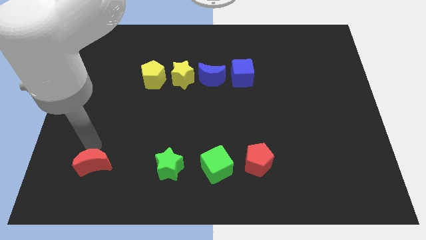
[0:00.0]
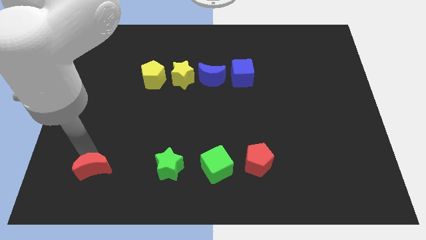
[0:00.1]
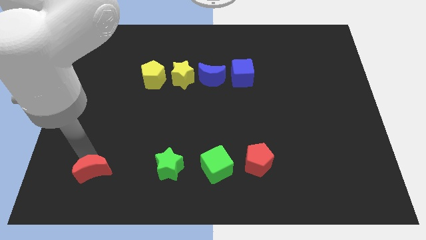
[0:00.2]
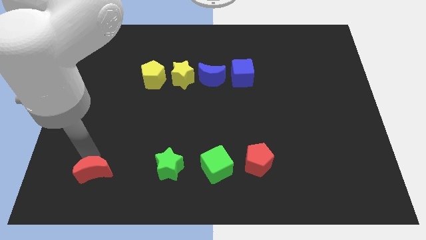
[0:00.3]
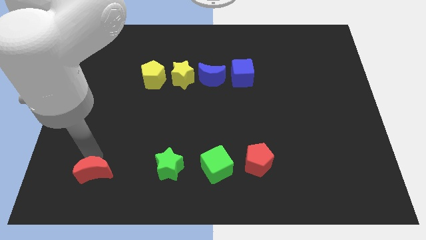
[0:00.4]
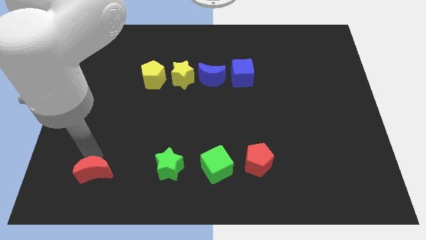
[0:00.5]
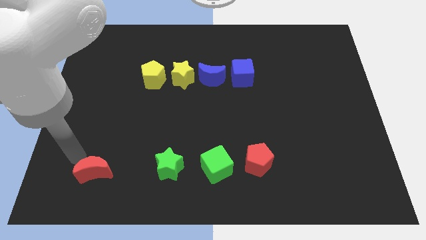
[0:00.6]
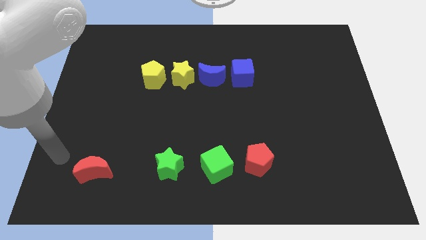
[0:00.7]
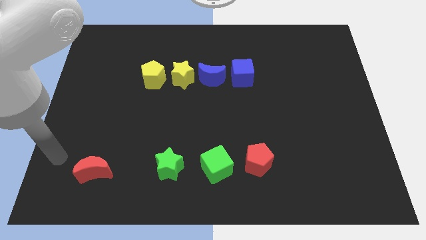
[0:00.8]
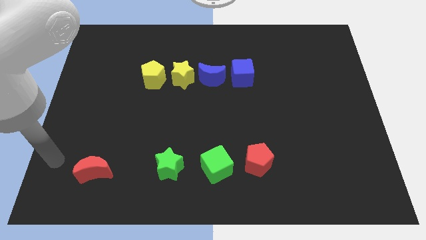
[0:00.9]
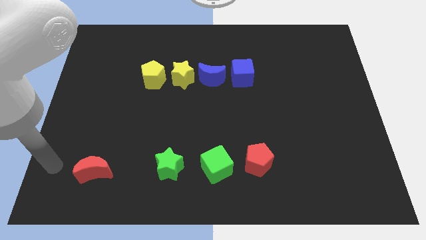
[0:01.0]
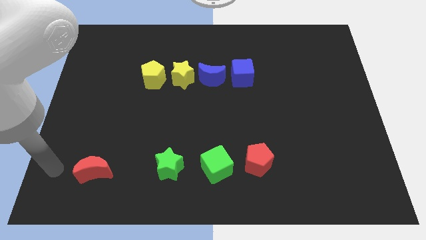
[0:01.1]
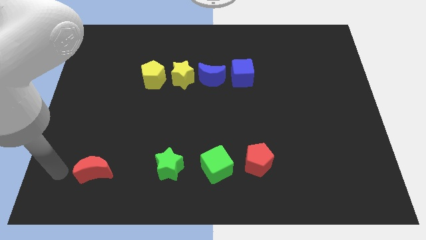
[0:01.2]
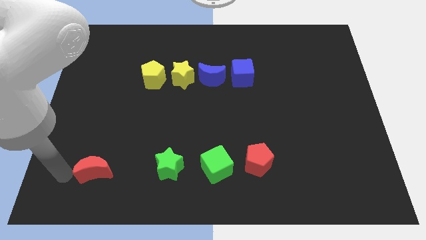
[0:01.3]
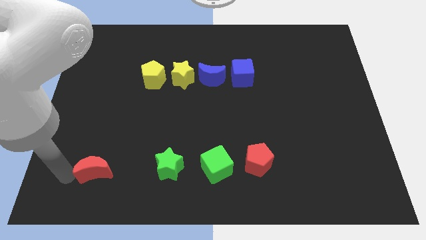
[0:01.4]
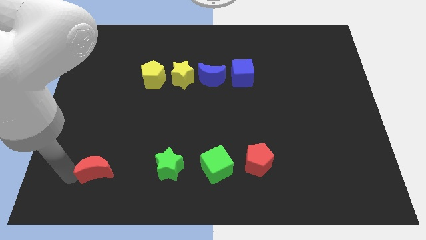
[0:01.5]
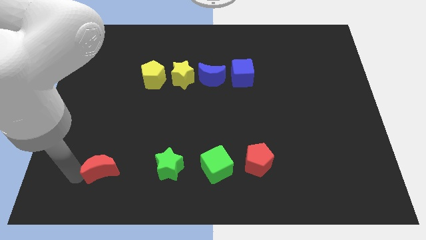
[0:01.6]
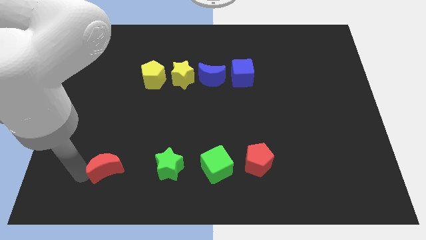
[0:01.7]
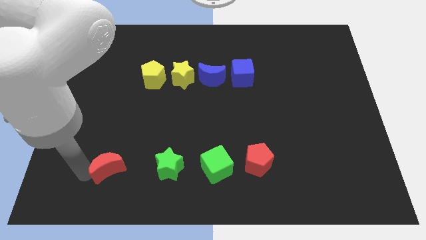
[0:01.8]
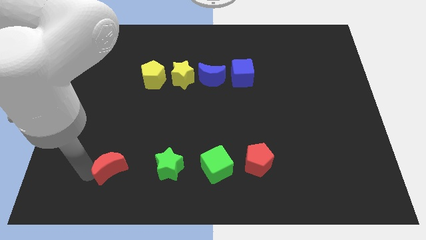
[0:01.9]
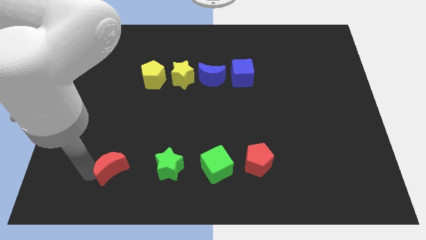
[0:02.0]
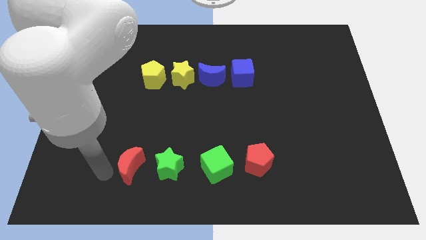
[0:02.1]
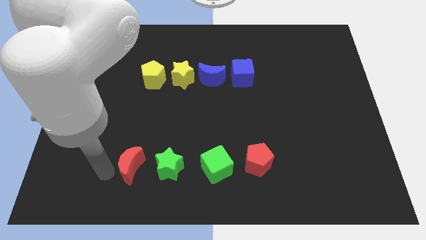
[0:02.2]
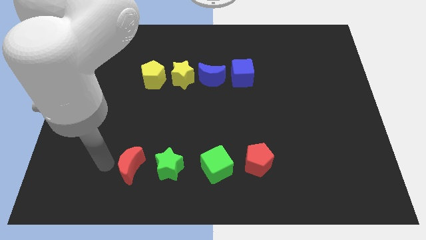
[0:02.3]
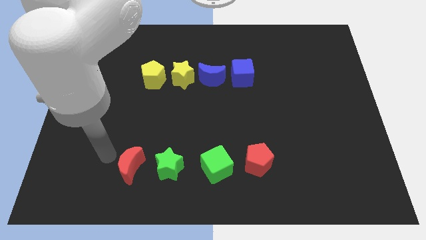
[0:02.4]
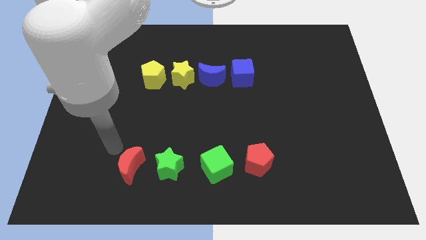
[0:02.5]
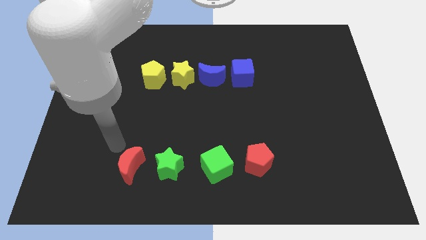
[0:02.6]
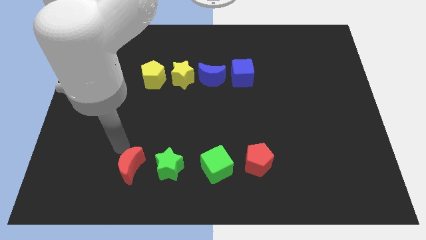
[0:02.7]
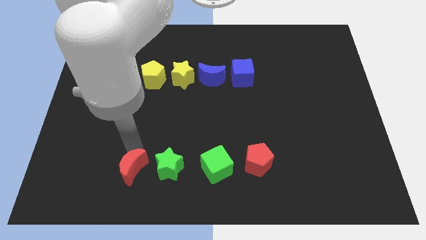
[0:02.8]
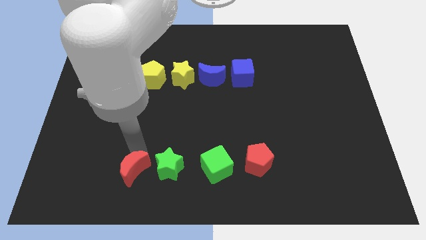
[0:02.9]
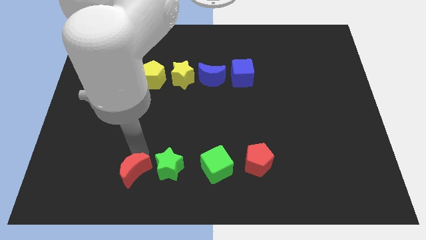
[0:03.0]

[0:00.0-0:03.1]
slide red moon close to the green star

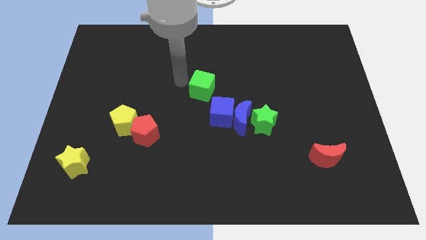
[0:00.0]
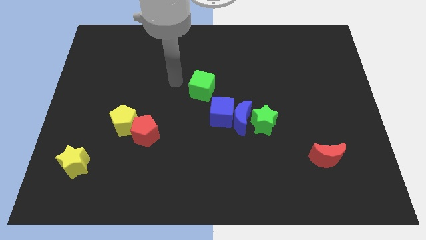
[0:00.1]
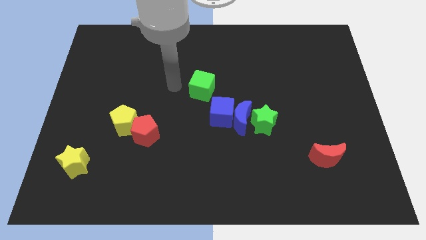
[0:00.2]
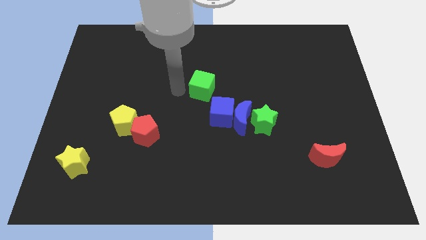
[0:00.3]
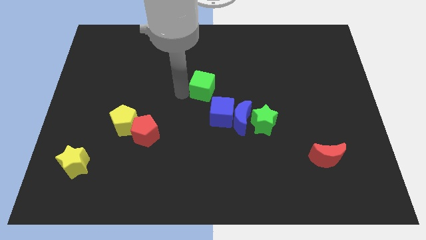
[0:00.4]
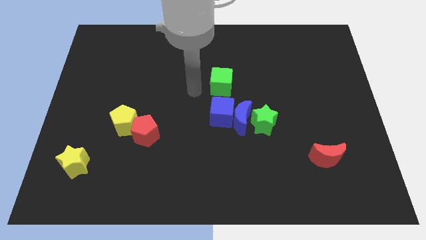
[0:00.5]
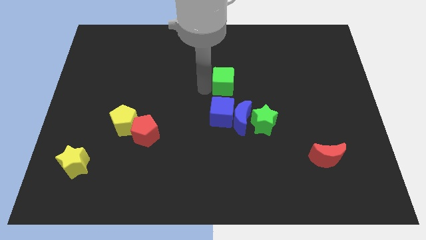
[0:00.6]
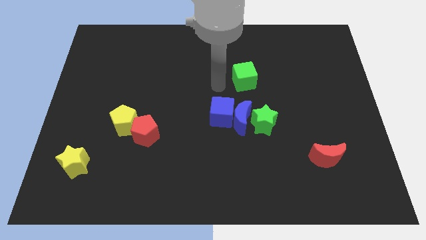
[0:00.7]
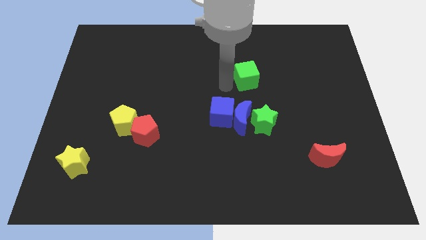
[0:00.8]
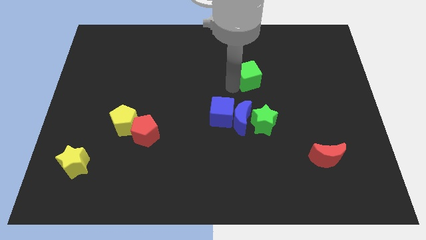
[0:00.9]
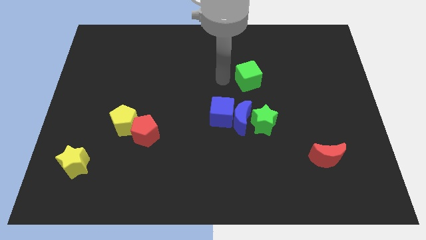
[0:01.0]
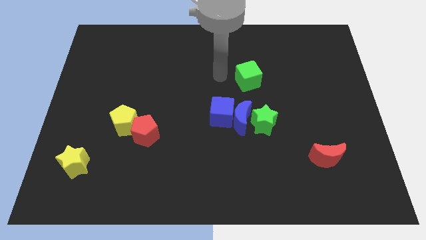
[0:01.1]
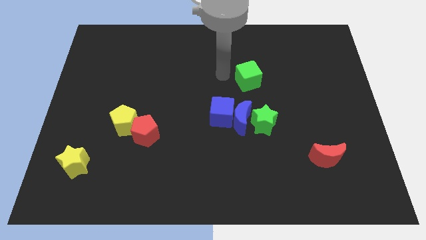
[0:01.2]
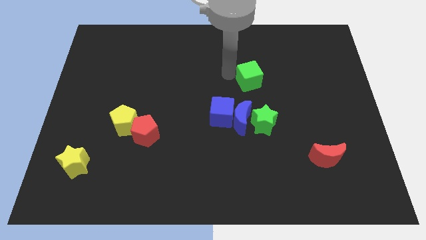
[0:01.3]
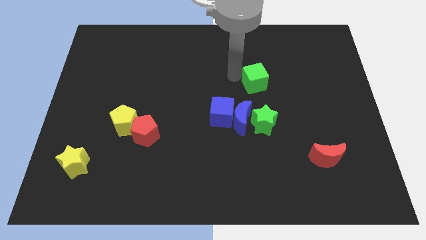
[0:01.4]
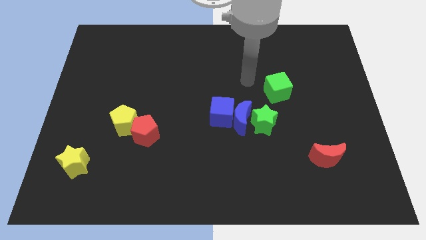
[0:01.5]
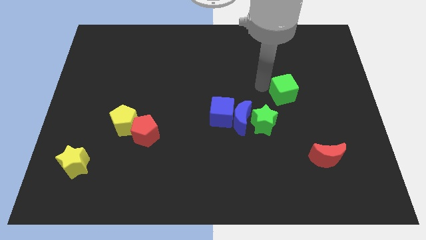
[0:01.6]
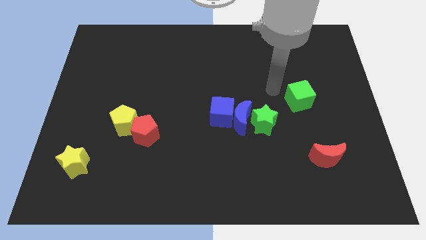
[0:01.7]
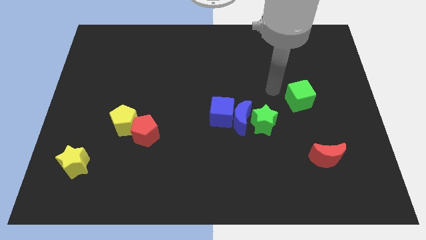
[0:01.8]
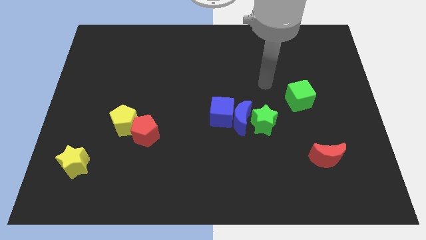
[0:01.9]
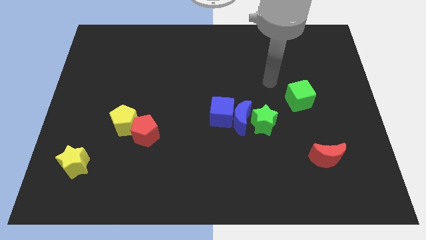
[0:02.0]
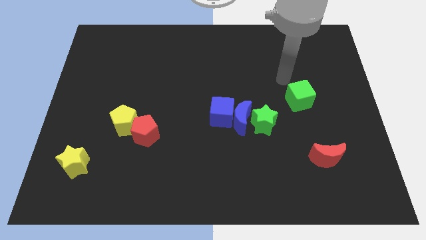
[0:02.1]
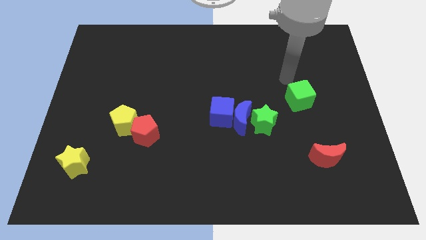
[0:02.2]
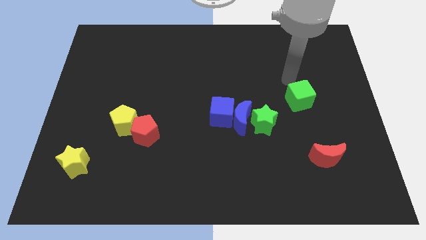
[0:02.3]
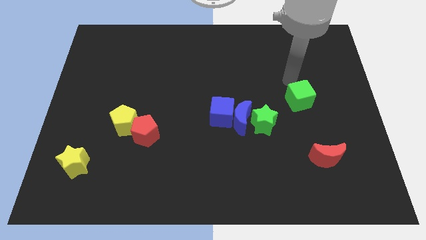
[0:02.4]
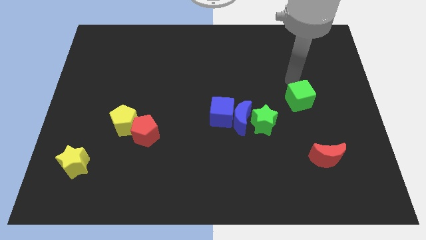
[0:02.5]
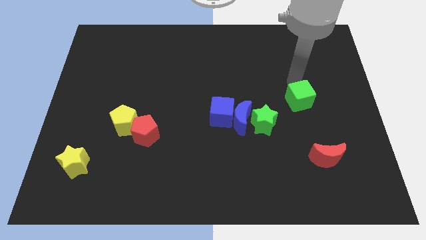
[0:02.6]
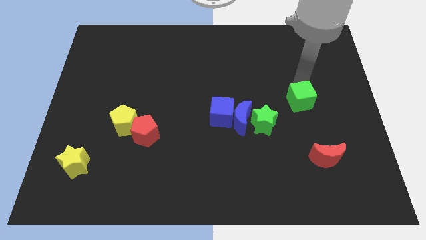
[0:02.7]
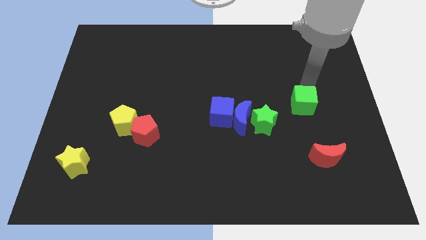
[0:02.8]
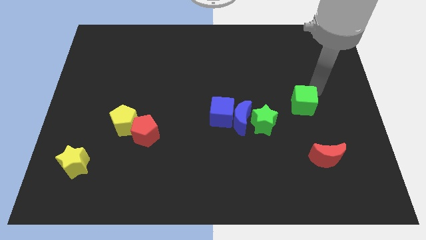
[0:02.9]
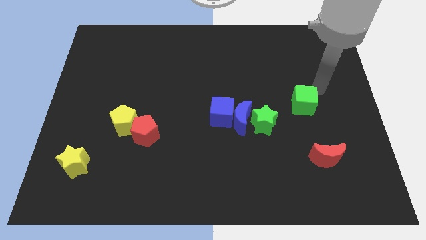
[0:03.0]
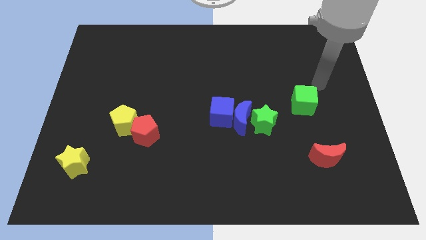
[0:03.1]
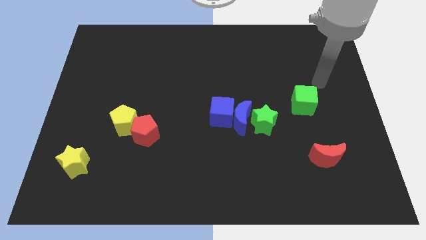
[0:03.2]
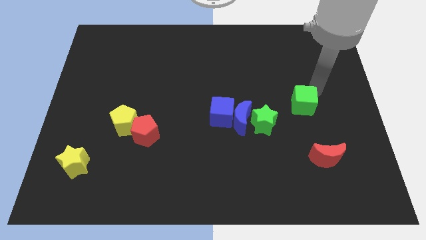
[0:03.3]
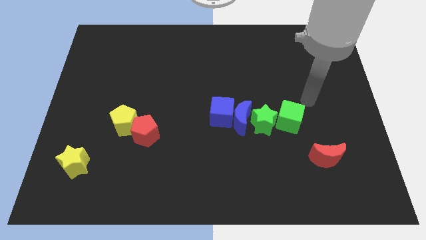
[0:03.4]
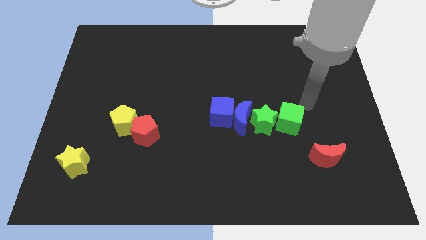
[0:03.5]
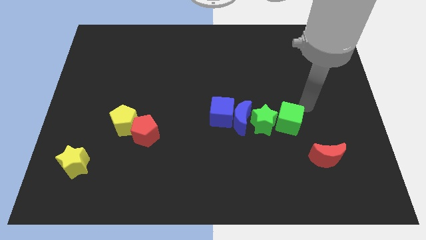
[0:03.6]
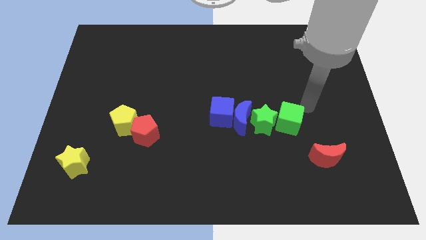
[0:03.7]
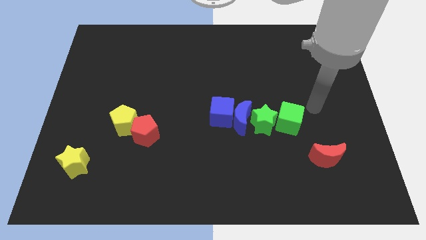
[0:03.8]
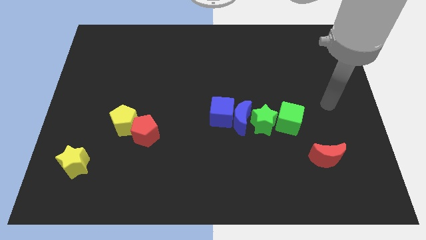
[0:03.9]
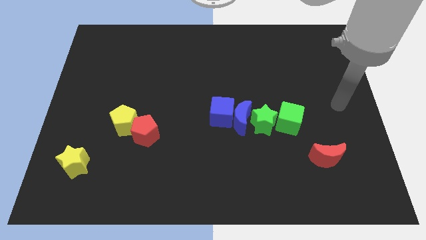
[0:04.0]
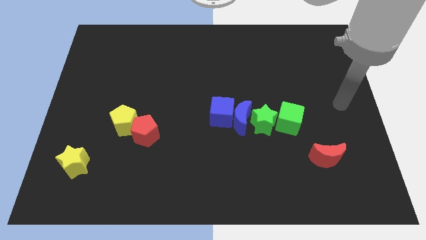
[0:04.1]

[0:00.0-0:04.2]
push the green cube to the right side of the green star

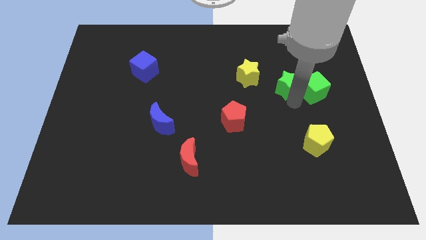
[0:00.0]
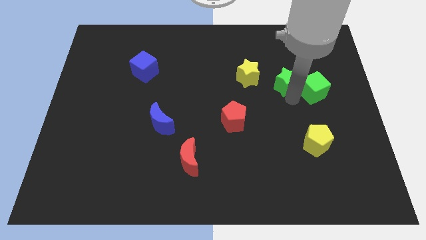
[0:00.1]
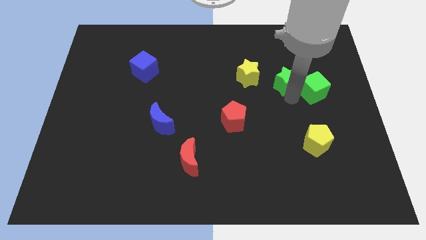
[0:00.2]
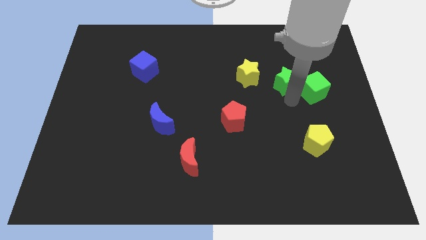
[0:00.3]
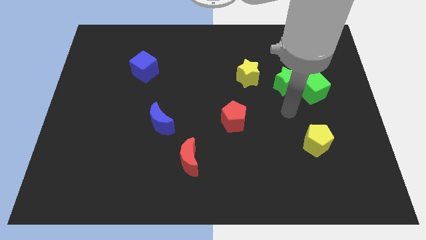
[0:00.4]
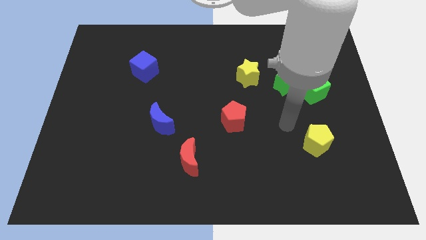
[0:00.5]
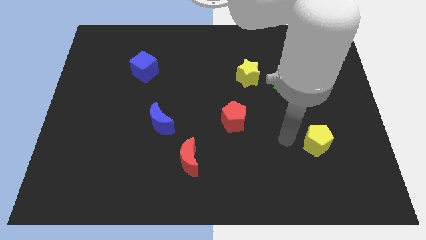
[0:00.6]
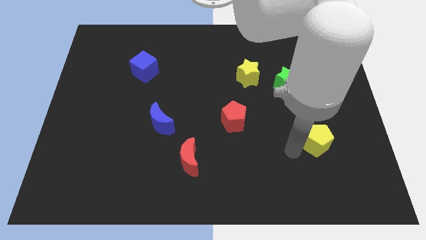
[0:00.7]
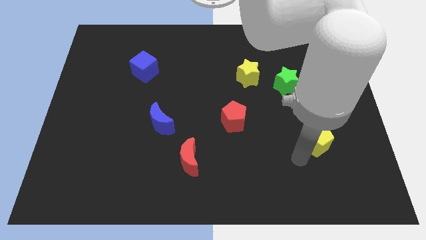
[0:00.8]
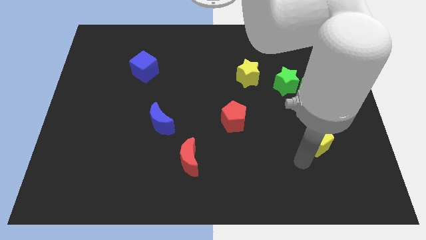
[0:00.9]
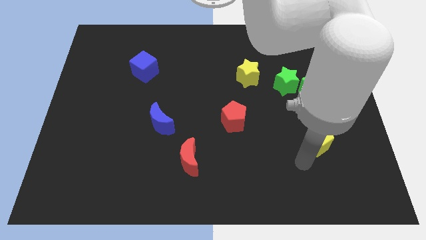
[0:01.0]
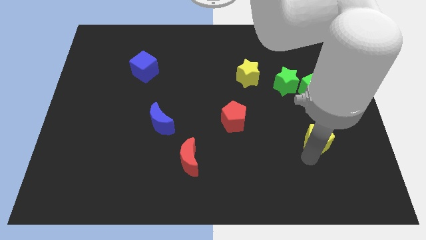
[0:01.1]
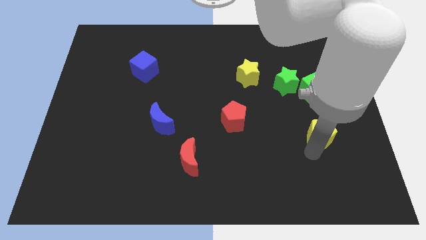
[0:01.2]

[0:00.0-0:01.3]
go near yellow pentagon

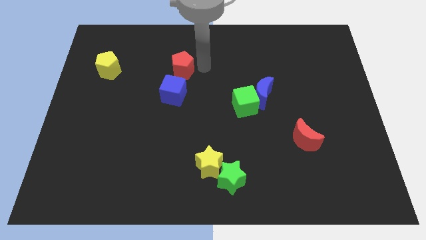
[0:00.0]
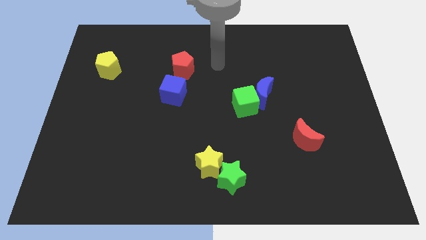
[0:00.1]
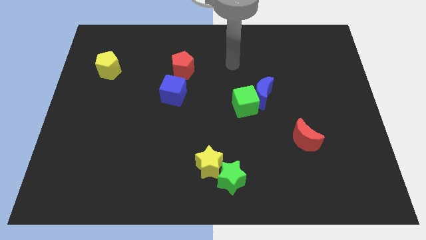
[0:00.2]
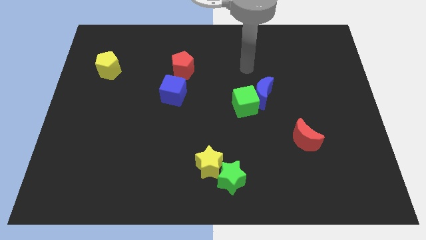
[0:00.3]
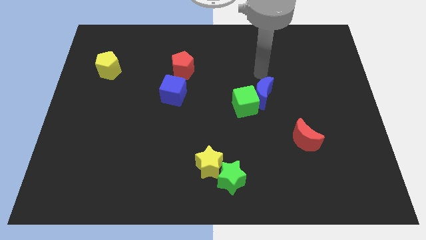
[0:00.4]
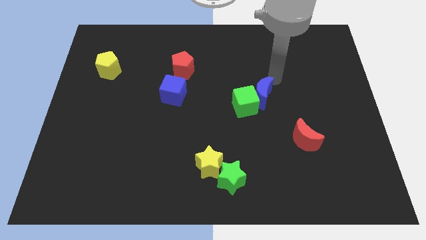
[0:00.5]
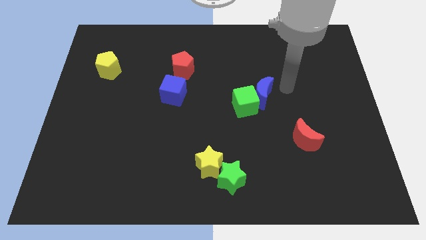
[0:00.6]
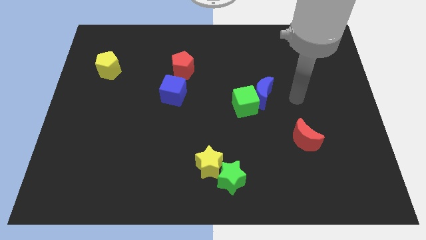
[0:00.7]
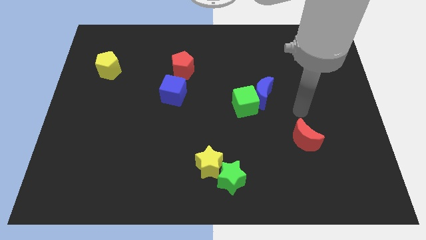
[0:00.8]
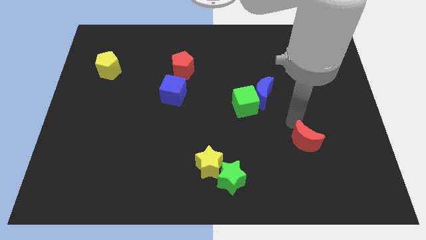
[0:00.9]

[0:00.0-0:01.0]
move the arm to the top of the red crescent
